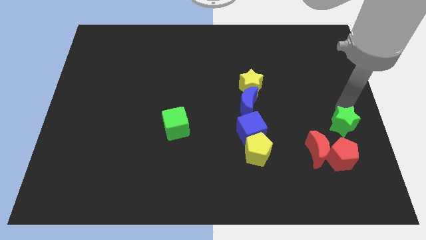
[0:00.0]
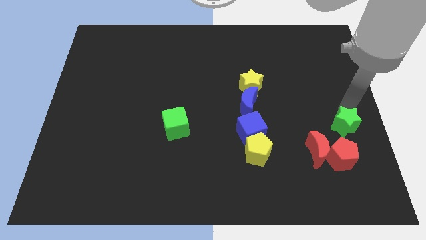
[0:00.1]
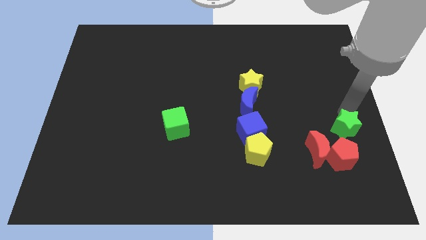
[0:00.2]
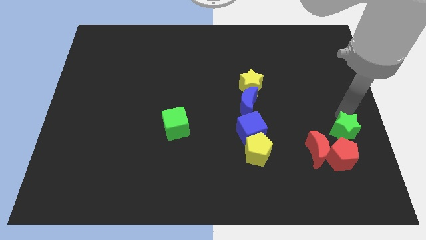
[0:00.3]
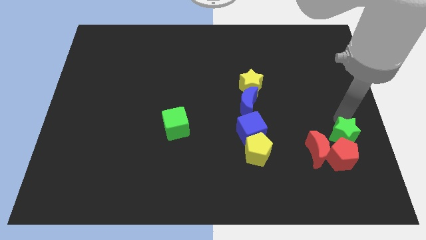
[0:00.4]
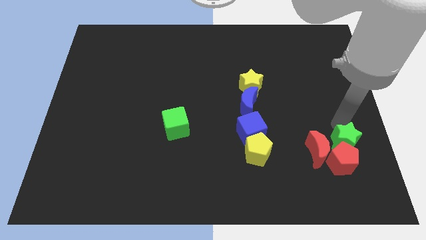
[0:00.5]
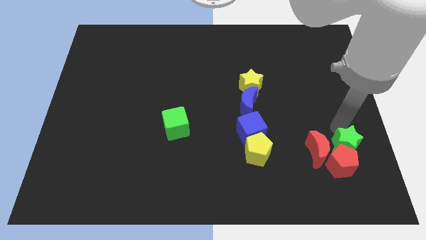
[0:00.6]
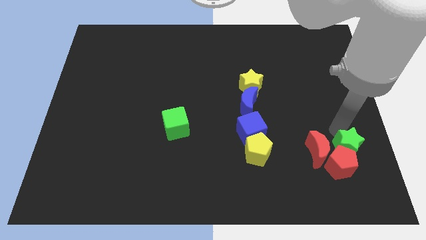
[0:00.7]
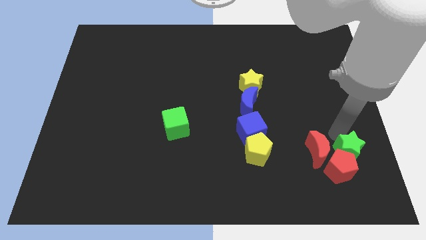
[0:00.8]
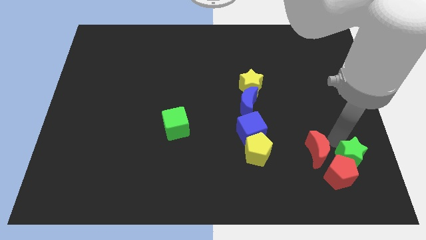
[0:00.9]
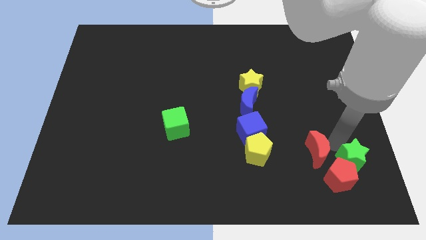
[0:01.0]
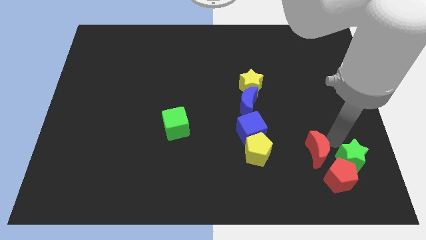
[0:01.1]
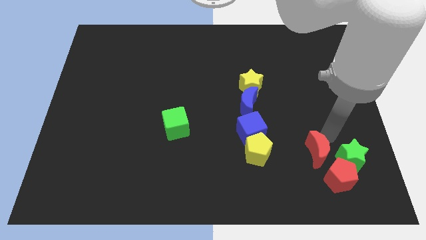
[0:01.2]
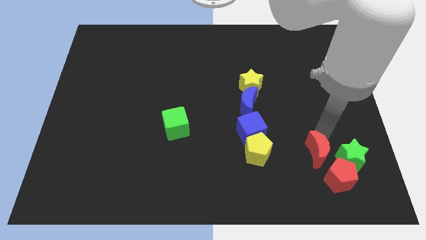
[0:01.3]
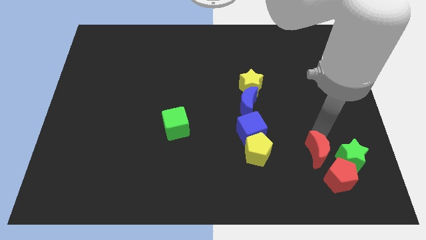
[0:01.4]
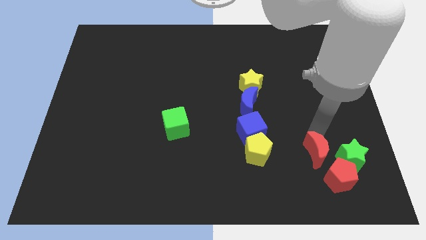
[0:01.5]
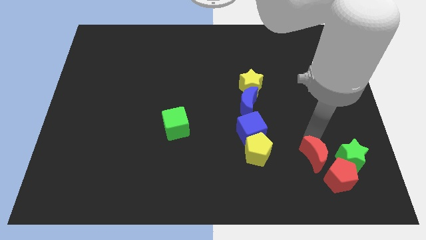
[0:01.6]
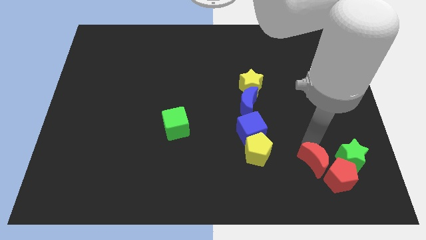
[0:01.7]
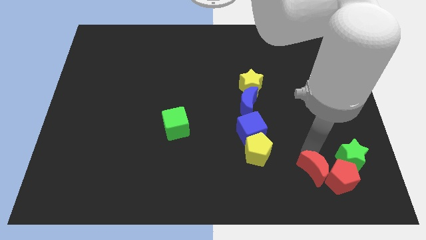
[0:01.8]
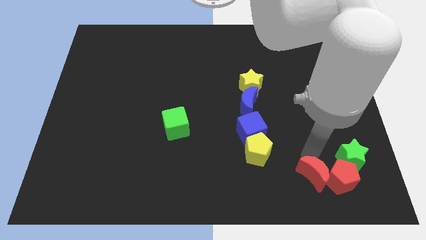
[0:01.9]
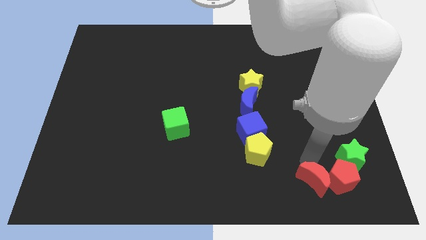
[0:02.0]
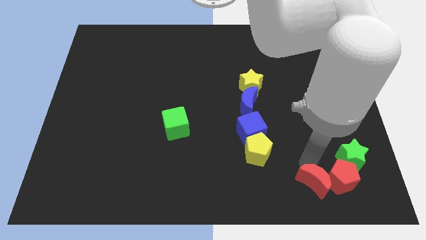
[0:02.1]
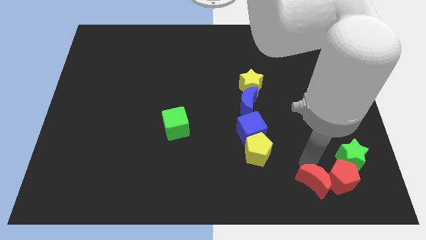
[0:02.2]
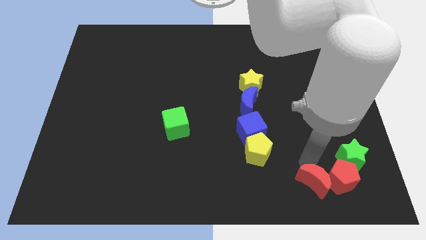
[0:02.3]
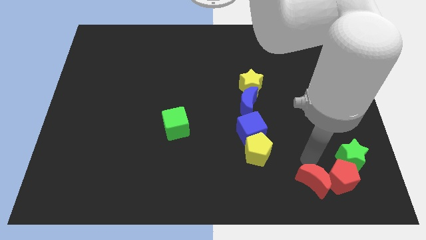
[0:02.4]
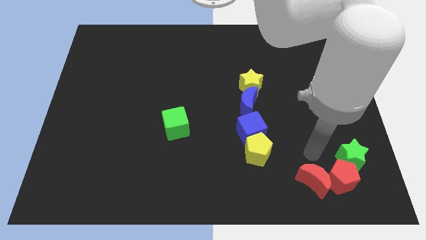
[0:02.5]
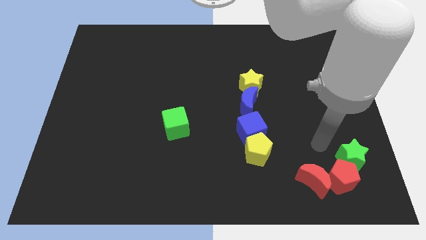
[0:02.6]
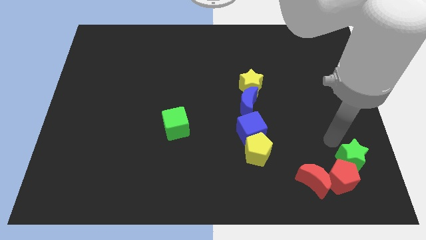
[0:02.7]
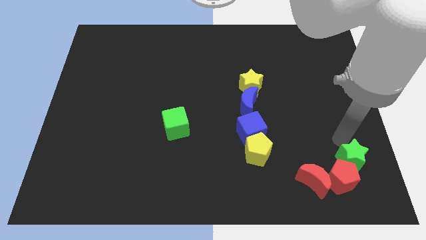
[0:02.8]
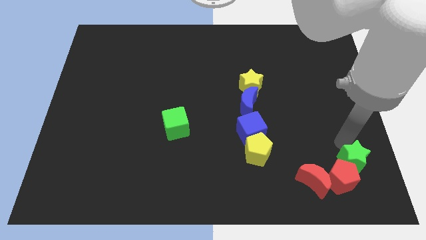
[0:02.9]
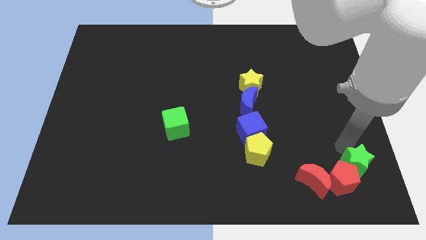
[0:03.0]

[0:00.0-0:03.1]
push the red crescent and red pentagon with a green star towards the bottom right side of the board

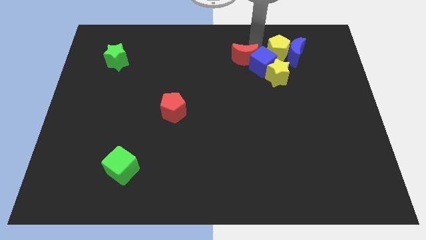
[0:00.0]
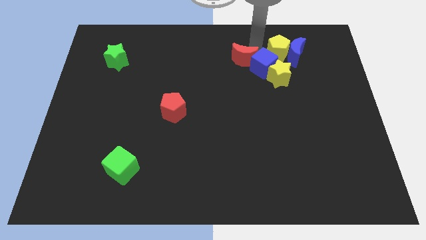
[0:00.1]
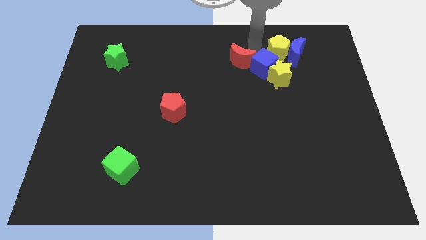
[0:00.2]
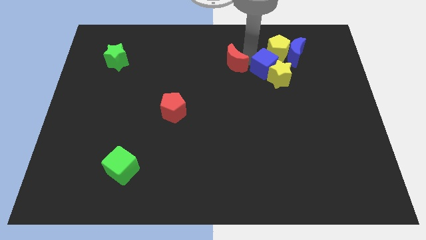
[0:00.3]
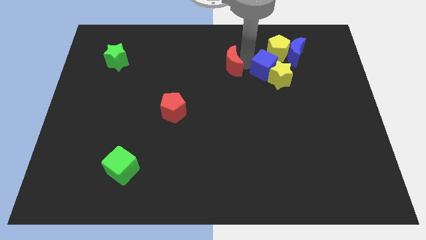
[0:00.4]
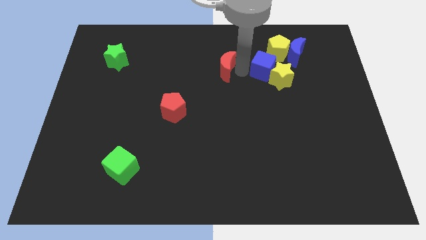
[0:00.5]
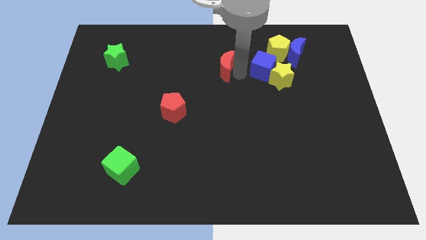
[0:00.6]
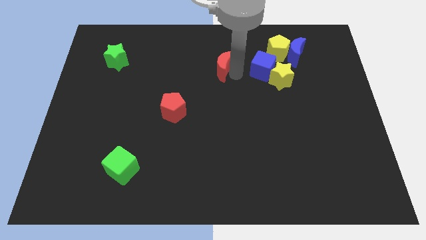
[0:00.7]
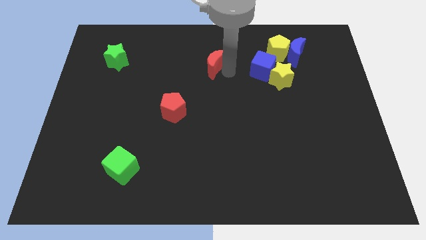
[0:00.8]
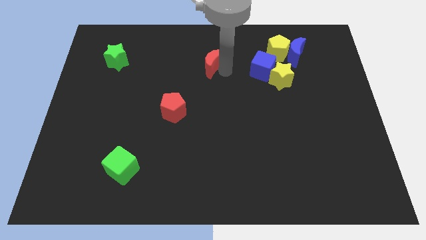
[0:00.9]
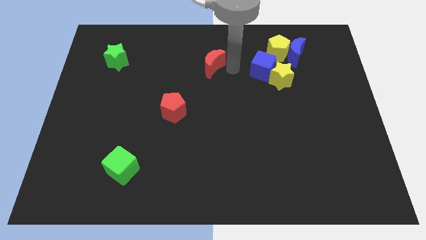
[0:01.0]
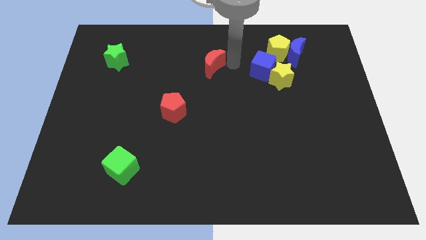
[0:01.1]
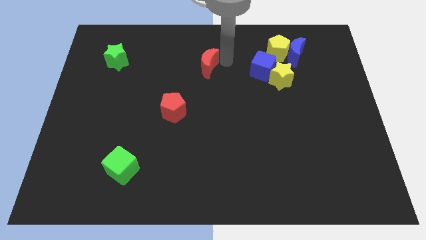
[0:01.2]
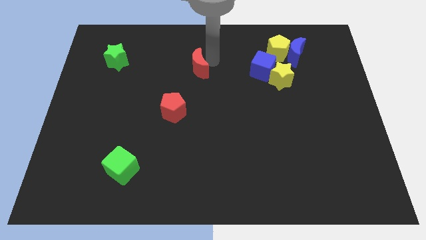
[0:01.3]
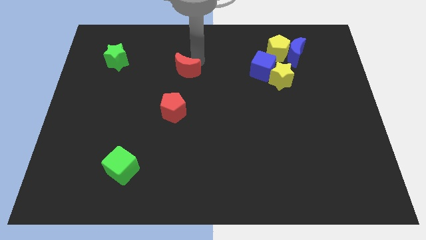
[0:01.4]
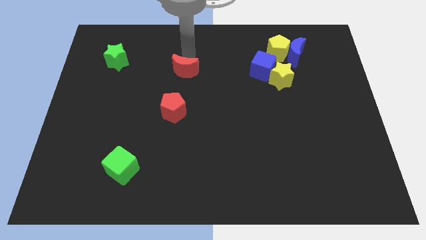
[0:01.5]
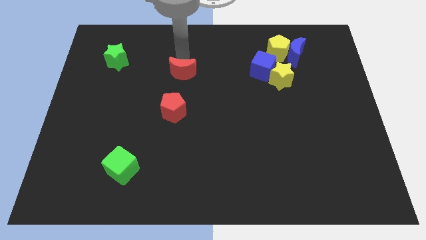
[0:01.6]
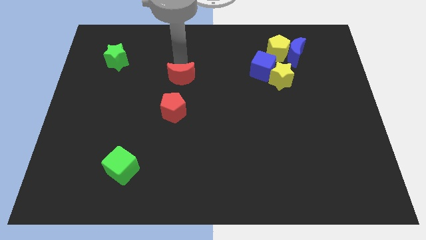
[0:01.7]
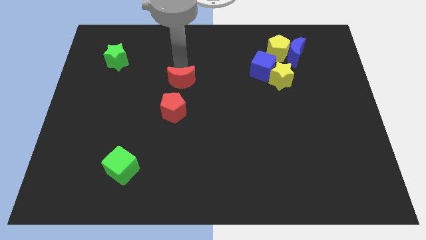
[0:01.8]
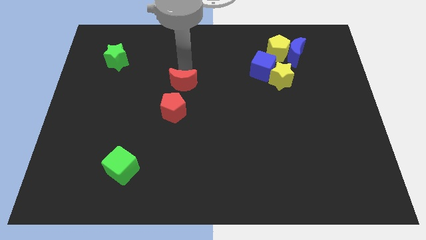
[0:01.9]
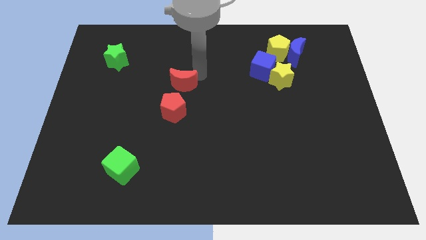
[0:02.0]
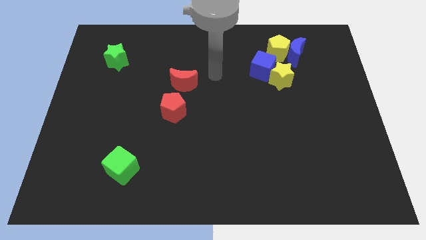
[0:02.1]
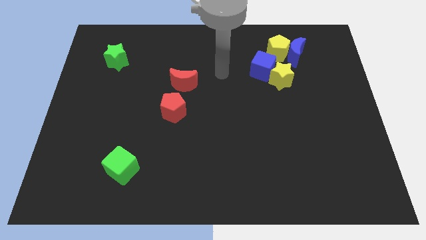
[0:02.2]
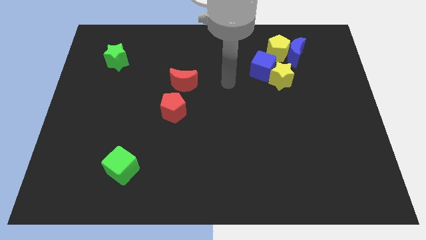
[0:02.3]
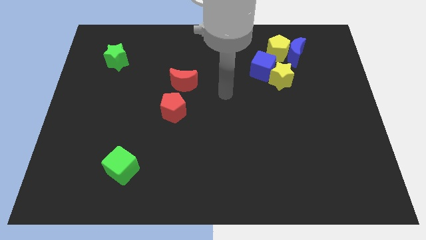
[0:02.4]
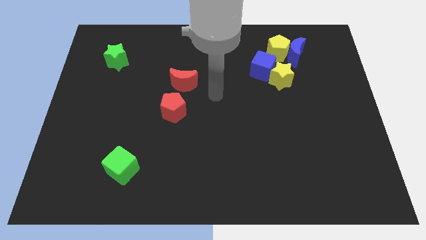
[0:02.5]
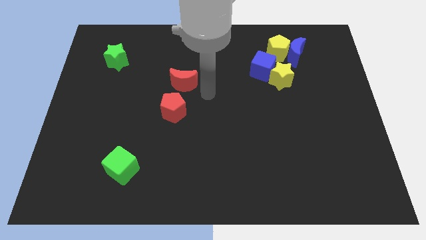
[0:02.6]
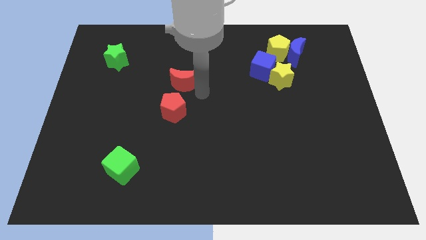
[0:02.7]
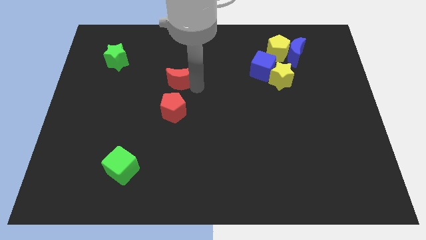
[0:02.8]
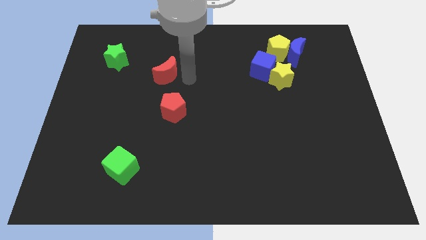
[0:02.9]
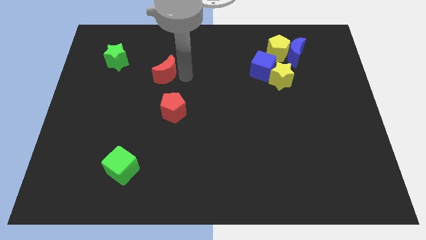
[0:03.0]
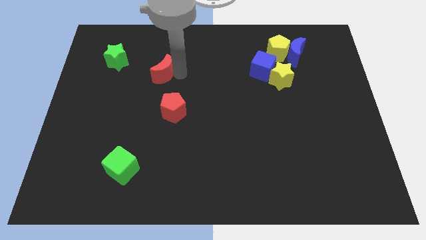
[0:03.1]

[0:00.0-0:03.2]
separate the red crescent from the group of blocks

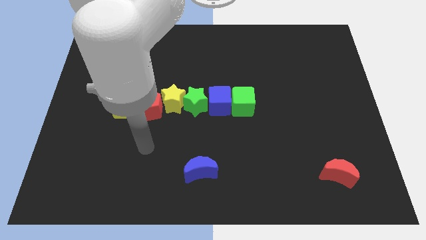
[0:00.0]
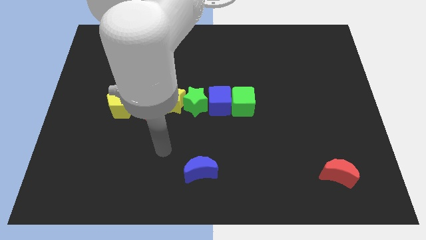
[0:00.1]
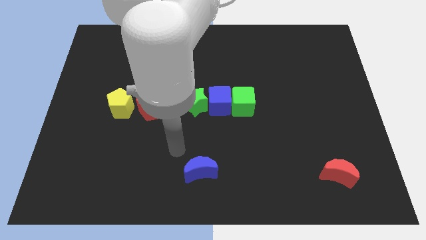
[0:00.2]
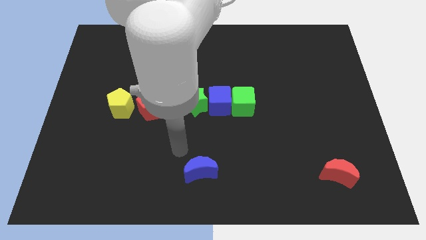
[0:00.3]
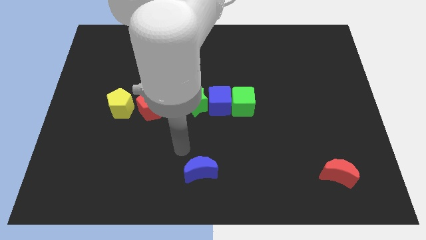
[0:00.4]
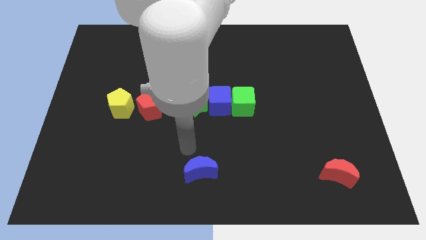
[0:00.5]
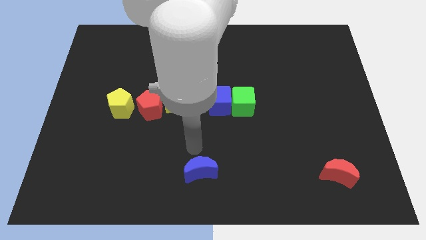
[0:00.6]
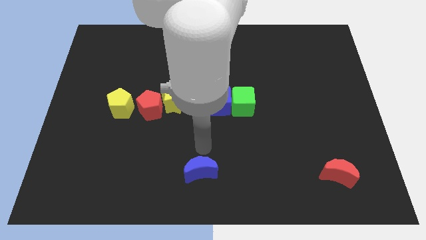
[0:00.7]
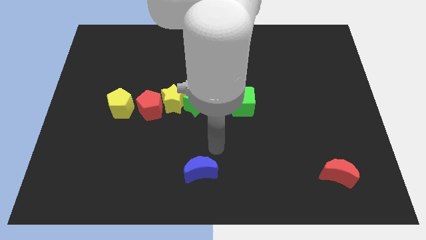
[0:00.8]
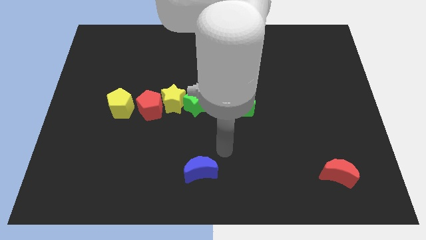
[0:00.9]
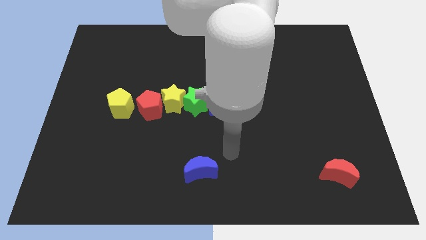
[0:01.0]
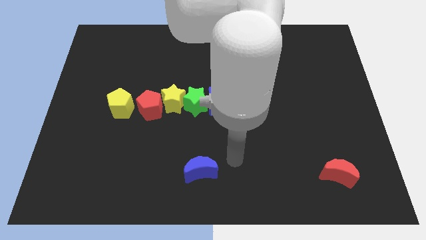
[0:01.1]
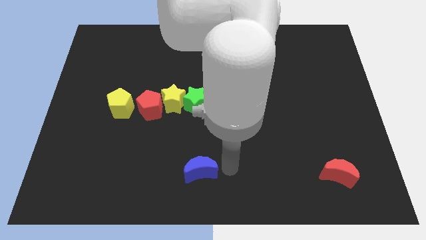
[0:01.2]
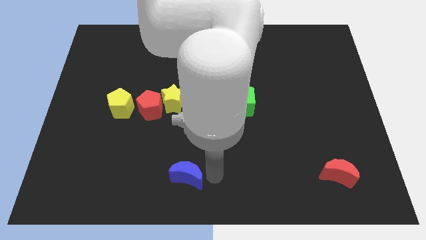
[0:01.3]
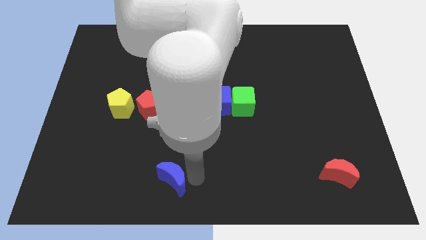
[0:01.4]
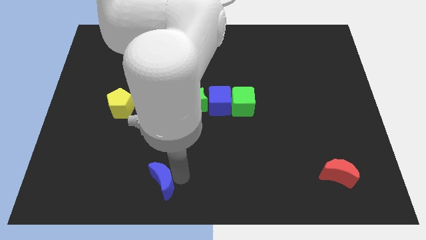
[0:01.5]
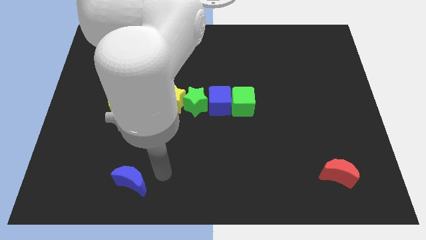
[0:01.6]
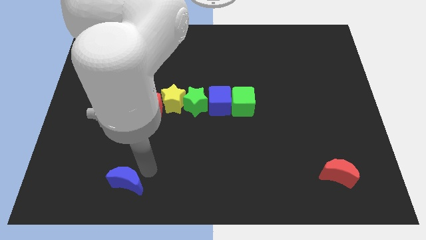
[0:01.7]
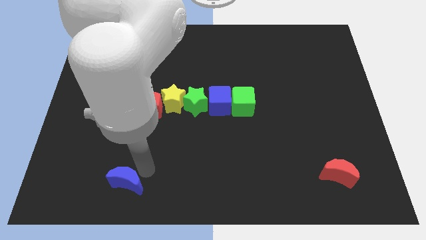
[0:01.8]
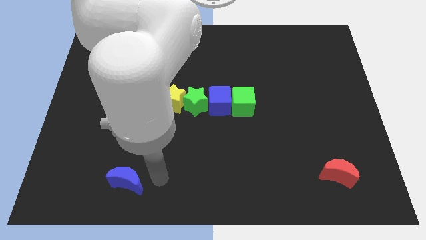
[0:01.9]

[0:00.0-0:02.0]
place the blue moon towards the bottom left of the board

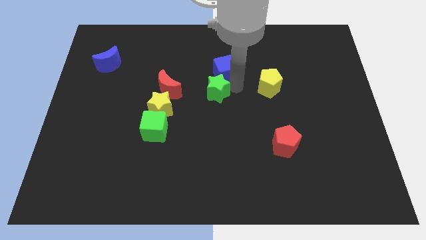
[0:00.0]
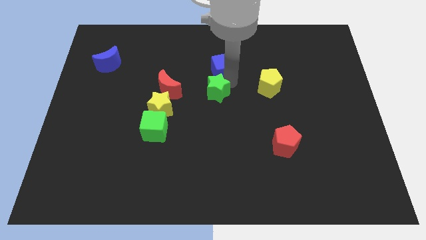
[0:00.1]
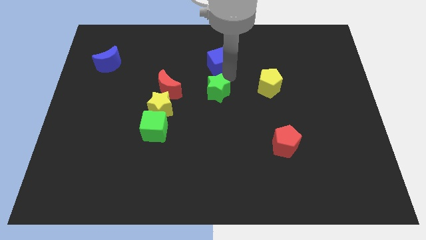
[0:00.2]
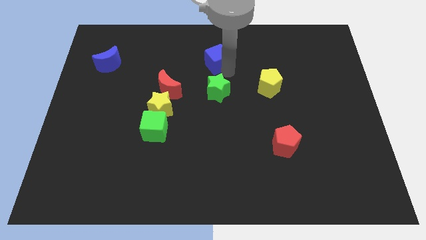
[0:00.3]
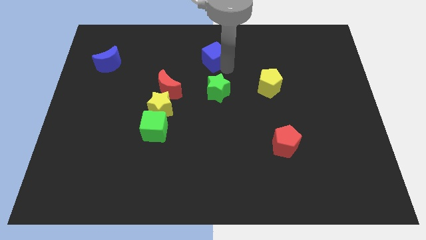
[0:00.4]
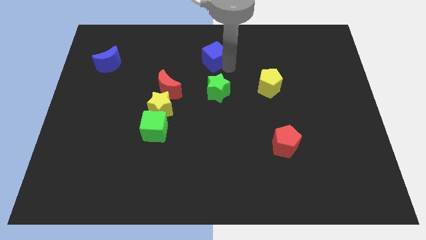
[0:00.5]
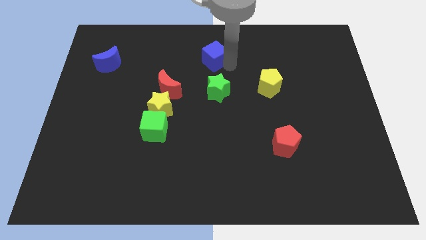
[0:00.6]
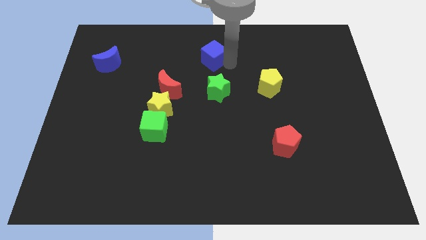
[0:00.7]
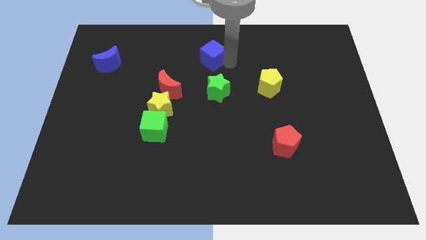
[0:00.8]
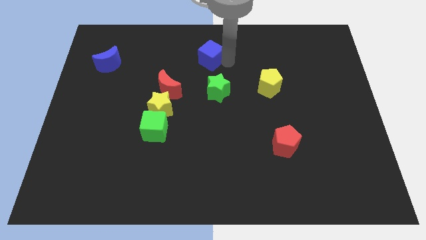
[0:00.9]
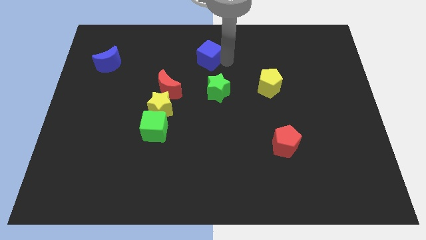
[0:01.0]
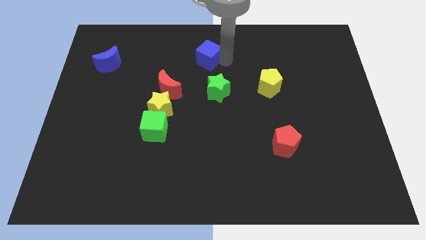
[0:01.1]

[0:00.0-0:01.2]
move the blue cube slightly to the top left of the board
